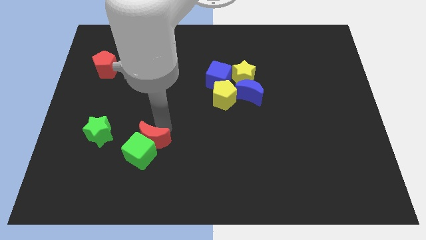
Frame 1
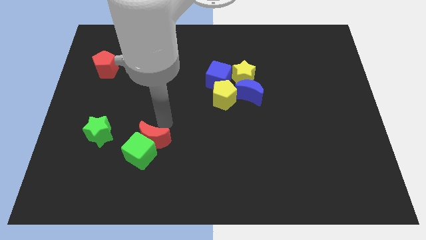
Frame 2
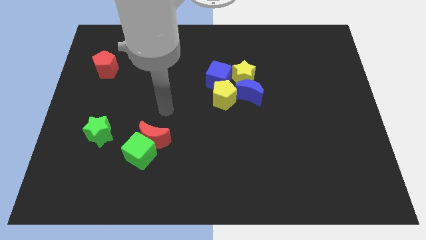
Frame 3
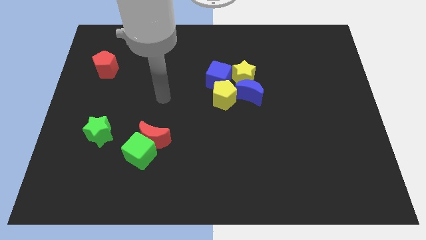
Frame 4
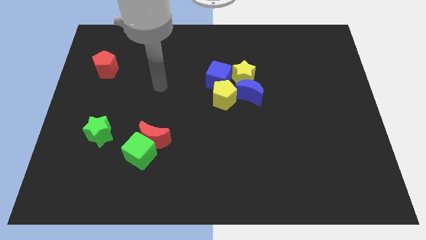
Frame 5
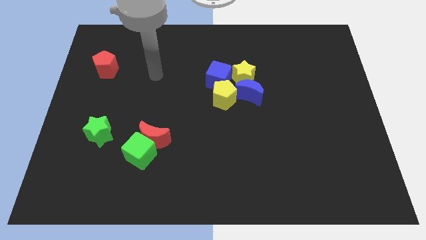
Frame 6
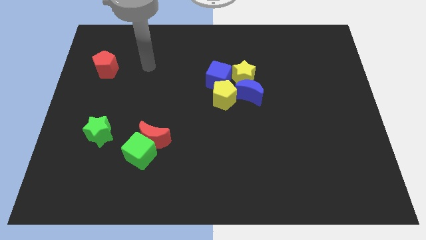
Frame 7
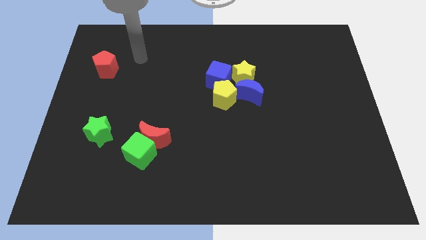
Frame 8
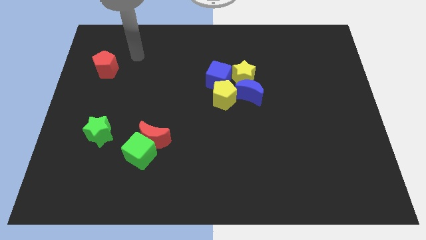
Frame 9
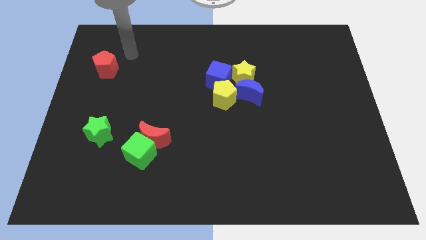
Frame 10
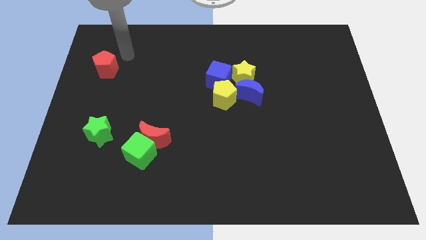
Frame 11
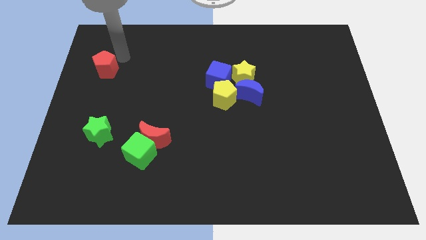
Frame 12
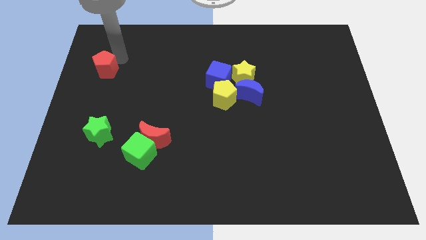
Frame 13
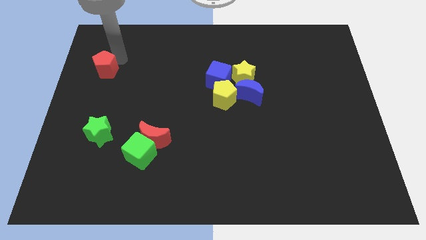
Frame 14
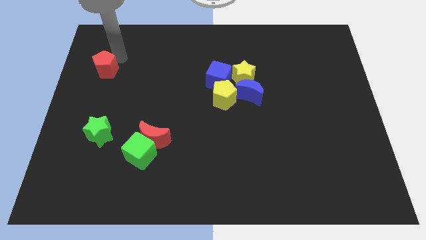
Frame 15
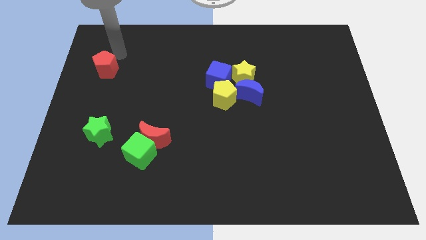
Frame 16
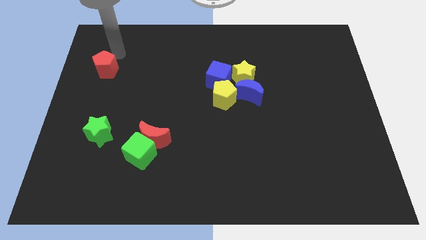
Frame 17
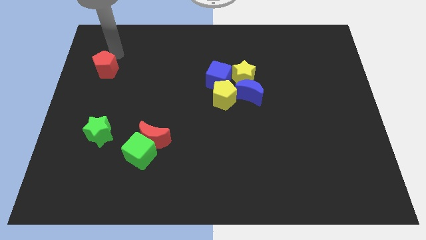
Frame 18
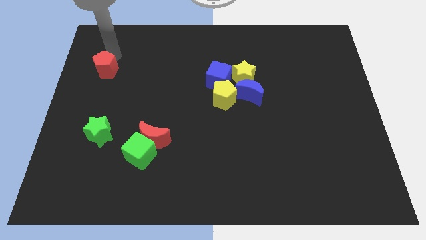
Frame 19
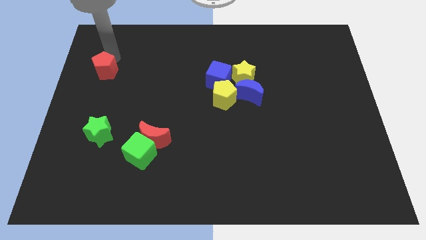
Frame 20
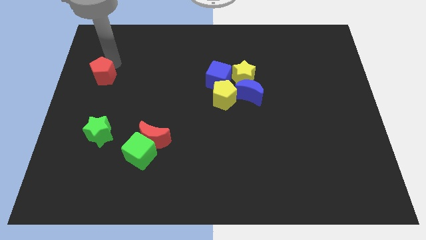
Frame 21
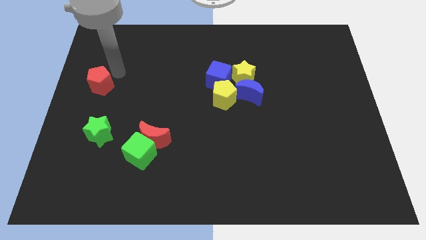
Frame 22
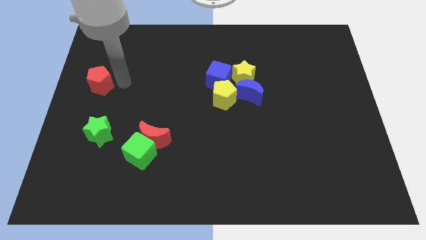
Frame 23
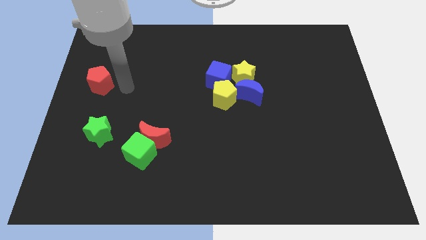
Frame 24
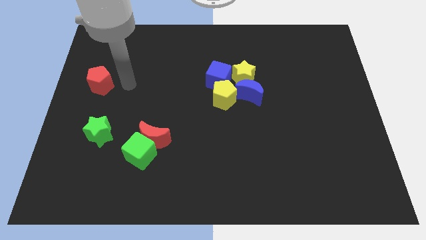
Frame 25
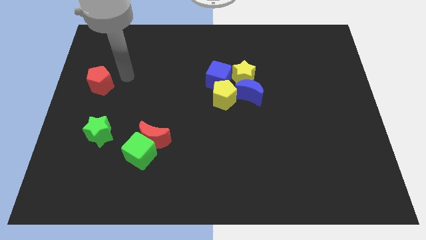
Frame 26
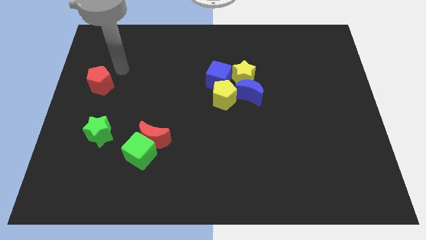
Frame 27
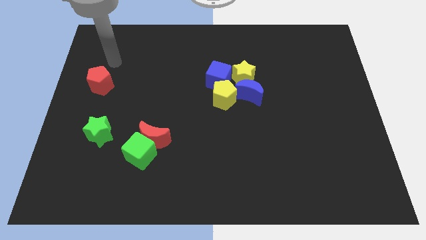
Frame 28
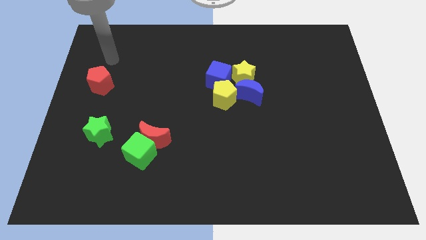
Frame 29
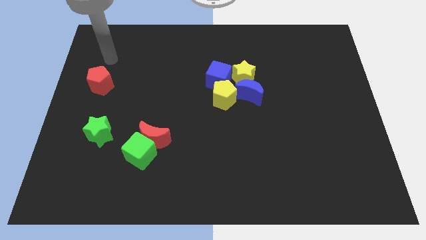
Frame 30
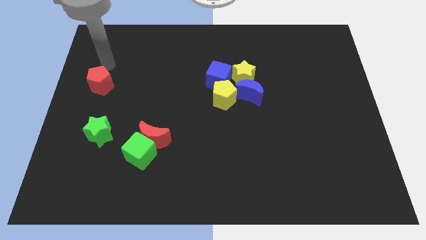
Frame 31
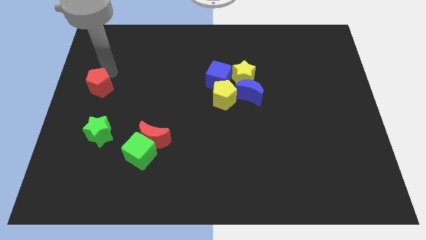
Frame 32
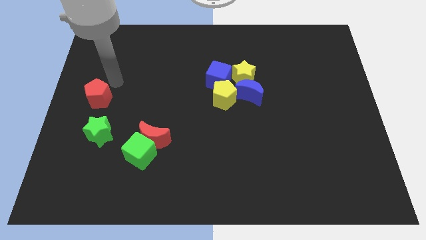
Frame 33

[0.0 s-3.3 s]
put the red pentagon at the top of green star

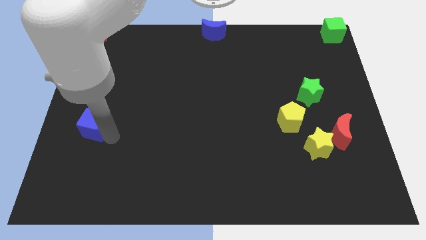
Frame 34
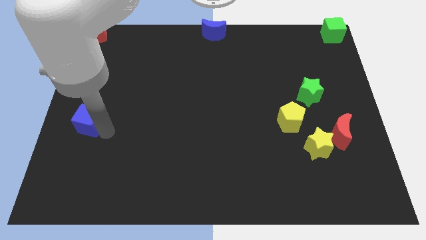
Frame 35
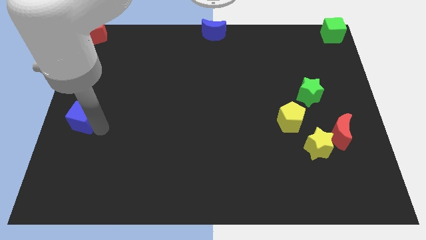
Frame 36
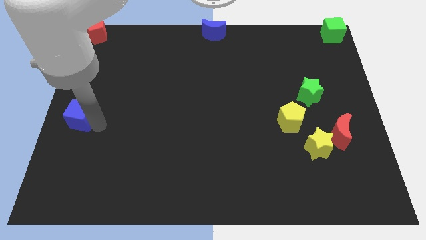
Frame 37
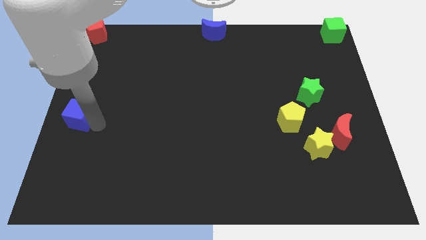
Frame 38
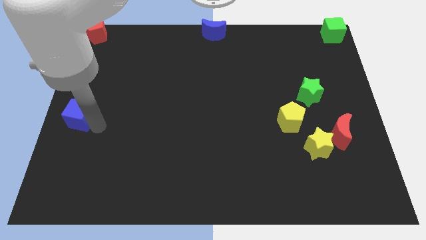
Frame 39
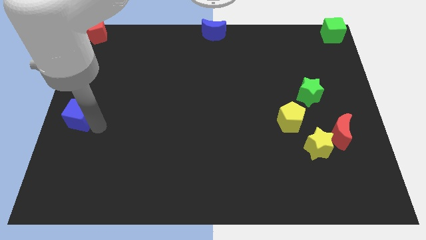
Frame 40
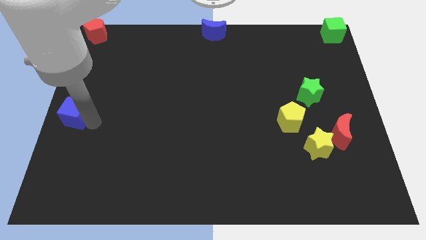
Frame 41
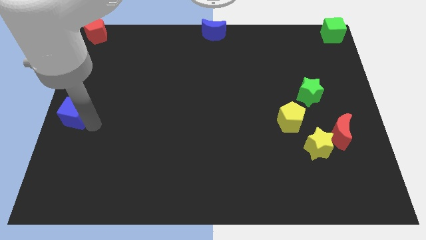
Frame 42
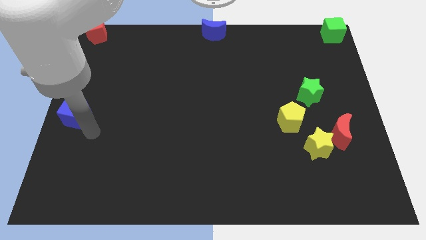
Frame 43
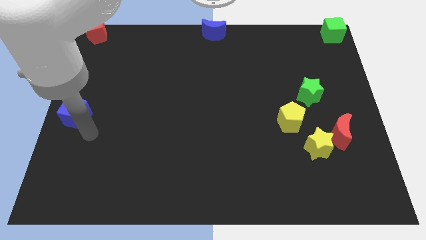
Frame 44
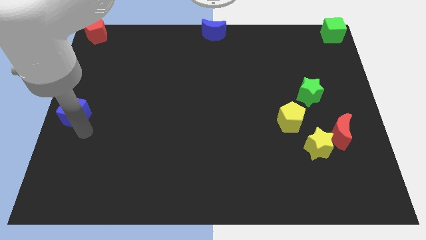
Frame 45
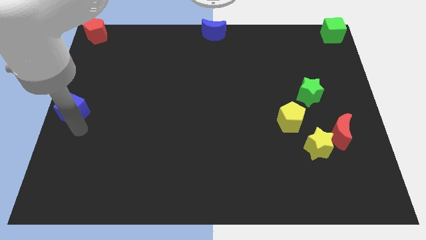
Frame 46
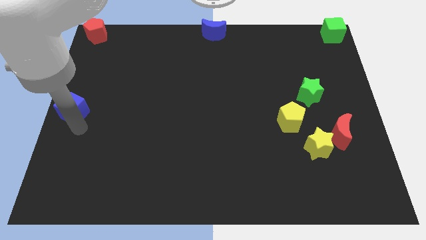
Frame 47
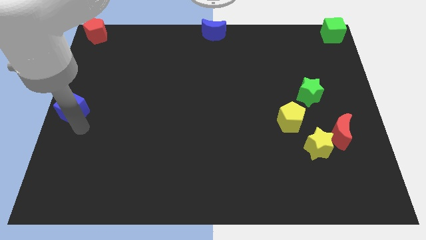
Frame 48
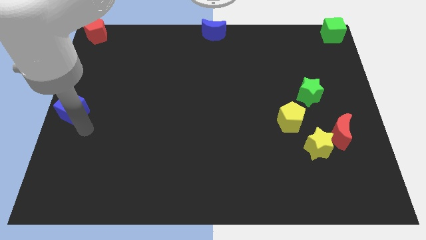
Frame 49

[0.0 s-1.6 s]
move the blue cube to the middle left

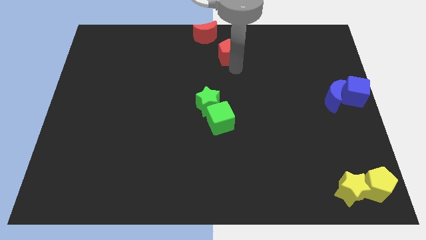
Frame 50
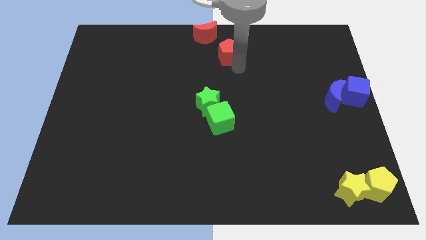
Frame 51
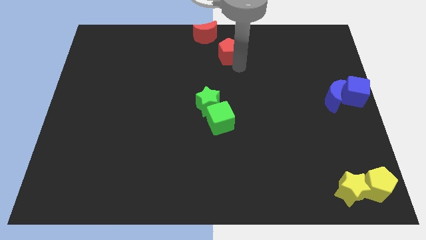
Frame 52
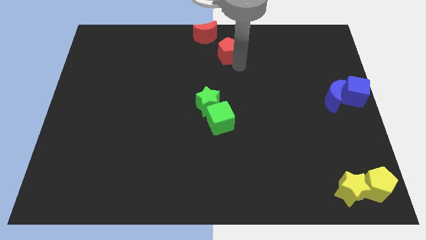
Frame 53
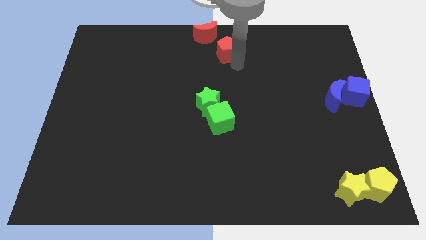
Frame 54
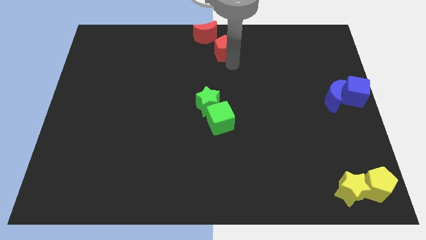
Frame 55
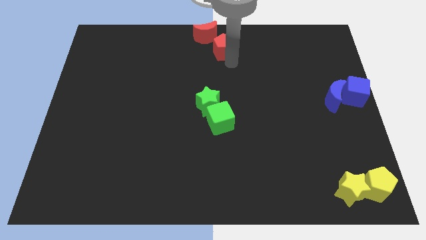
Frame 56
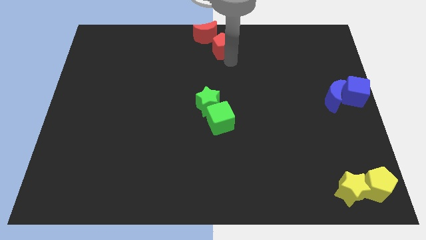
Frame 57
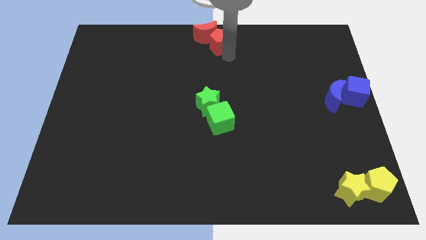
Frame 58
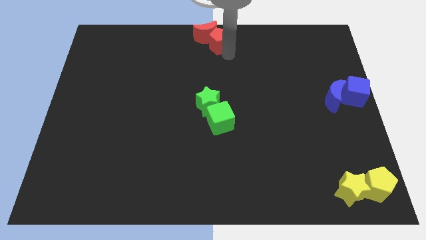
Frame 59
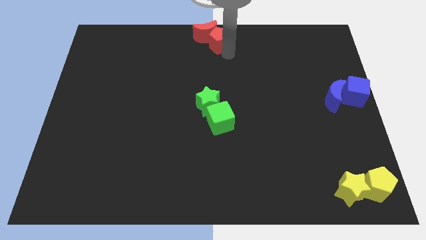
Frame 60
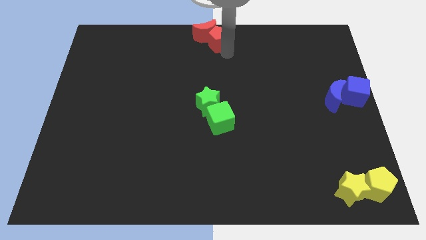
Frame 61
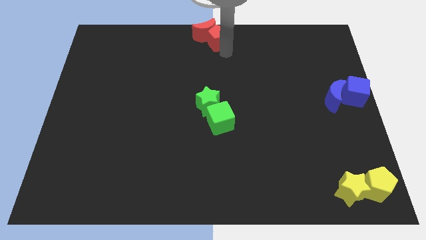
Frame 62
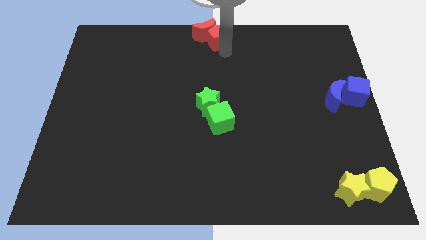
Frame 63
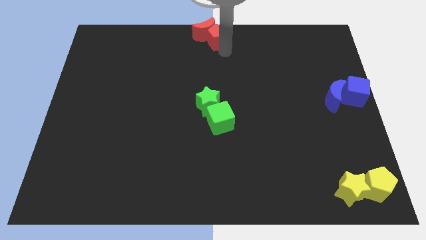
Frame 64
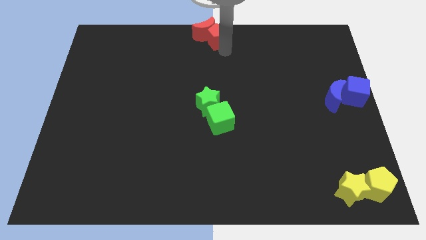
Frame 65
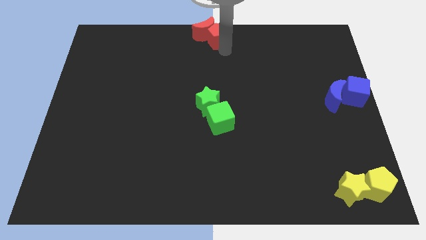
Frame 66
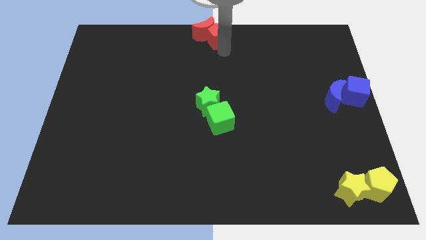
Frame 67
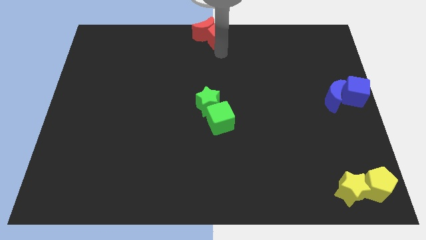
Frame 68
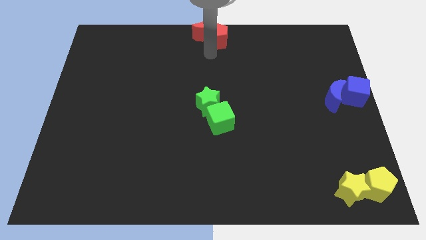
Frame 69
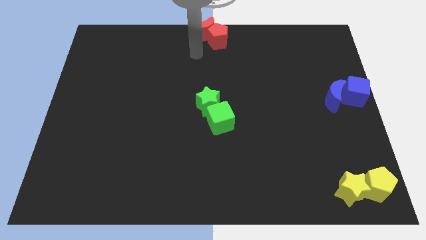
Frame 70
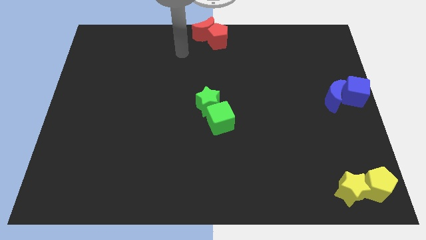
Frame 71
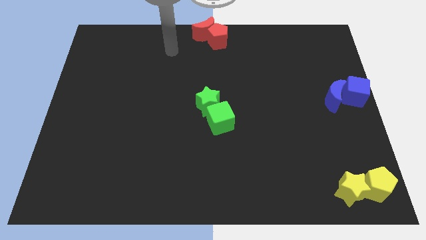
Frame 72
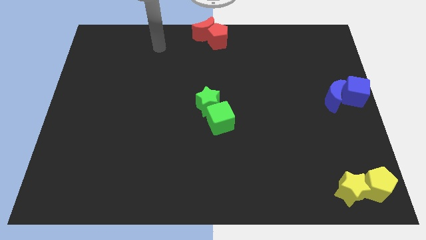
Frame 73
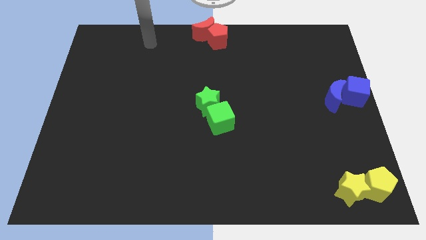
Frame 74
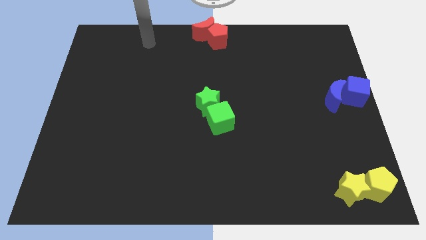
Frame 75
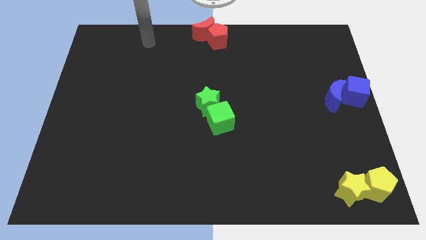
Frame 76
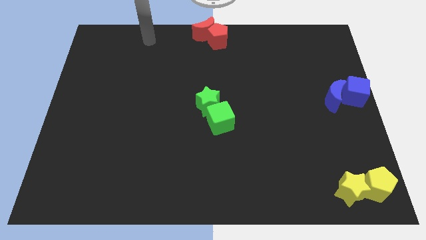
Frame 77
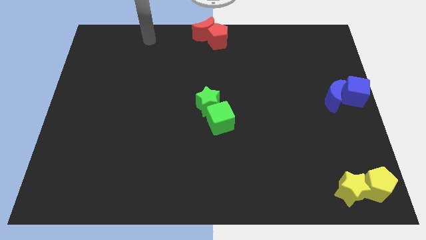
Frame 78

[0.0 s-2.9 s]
put red blocks together at the top center

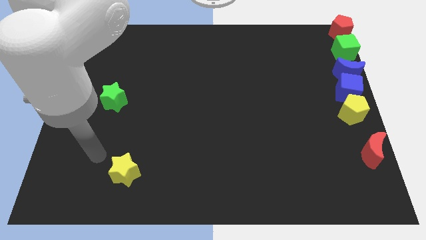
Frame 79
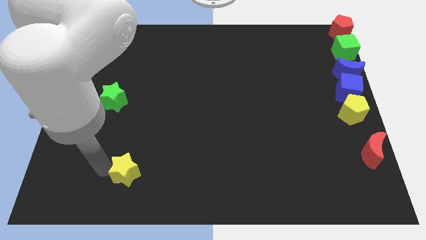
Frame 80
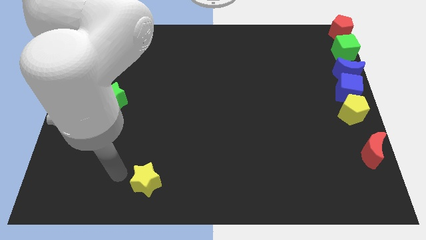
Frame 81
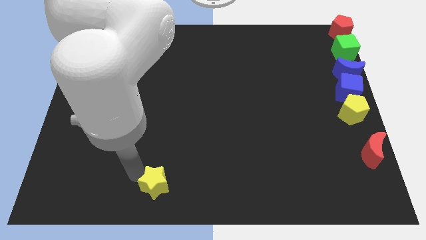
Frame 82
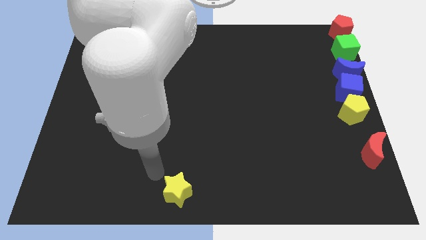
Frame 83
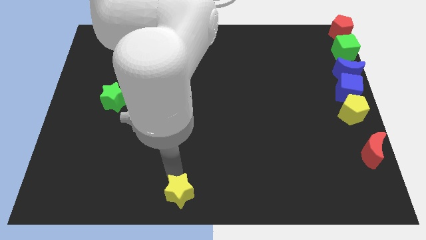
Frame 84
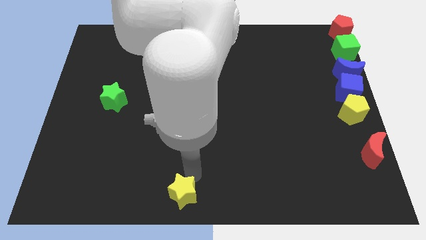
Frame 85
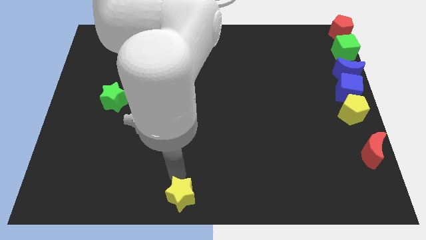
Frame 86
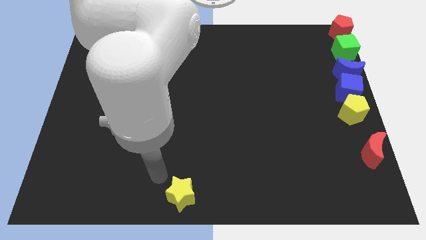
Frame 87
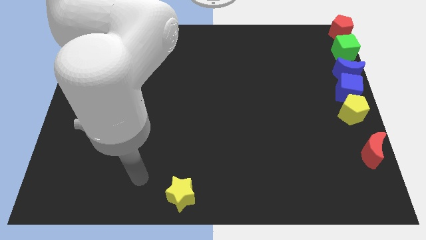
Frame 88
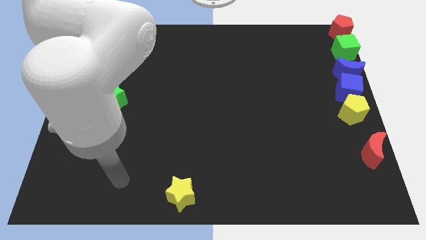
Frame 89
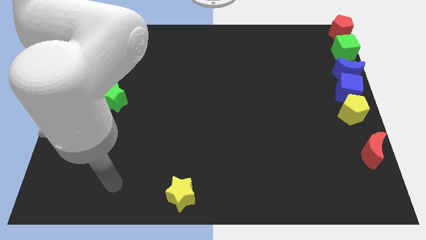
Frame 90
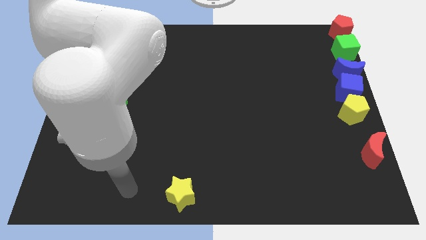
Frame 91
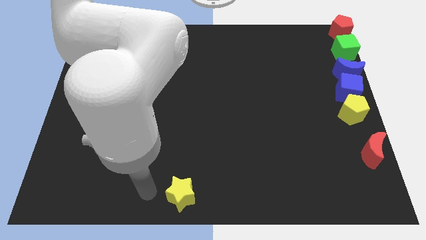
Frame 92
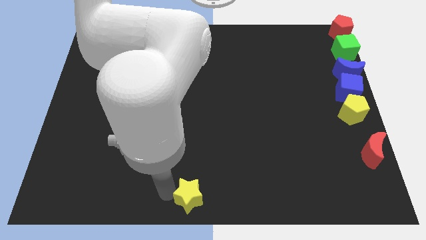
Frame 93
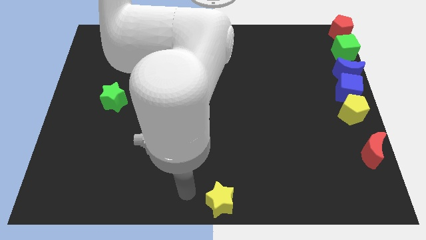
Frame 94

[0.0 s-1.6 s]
put the yellow star at the bottom center of the board
